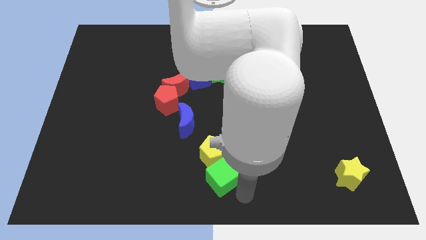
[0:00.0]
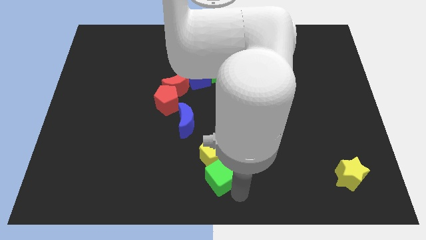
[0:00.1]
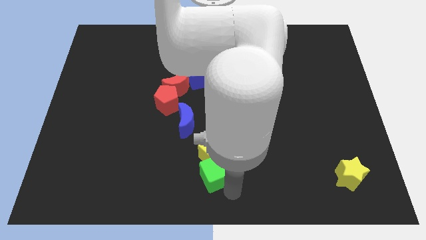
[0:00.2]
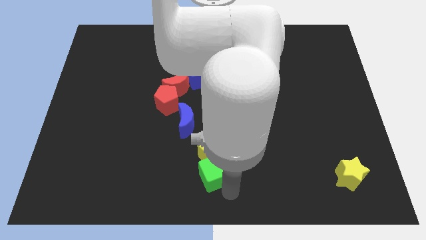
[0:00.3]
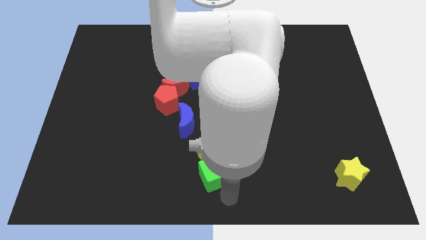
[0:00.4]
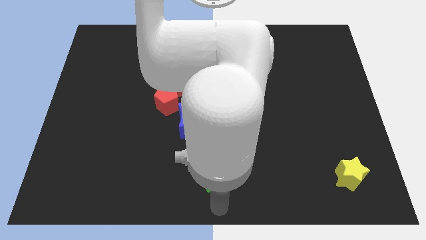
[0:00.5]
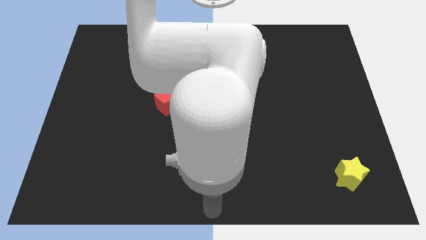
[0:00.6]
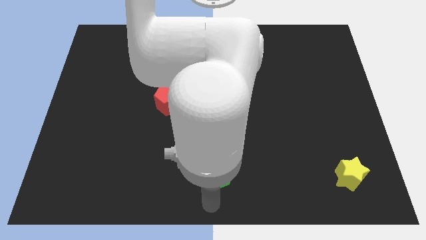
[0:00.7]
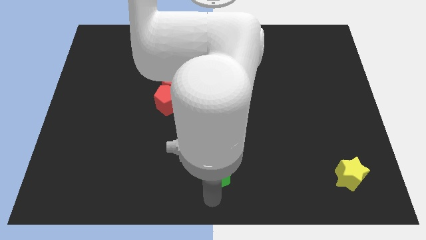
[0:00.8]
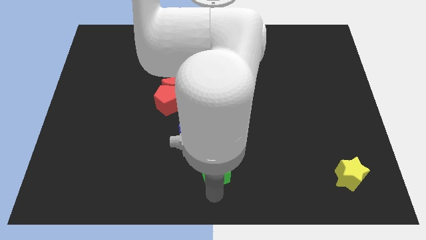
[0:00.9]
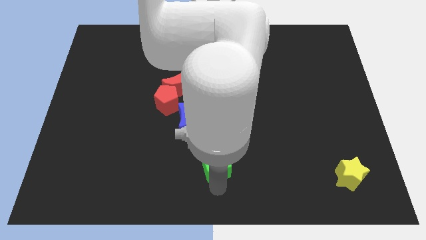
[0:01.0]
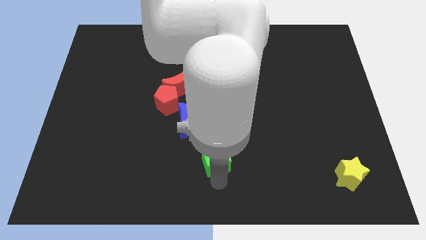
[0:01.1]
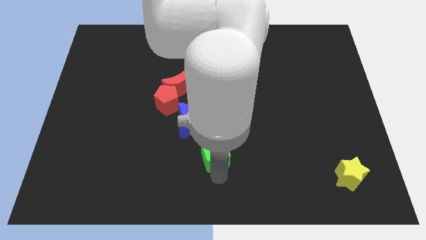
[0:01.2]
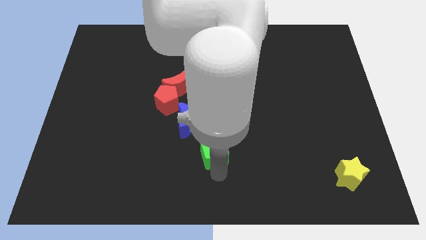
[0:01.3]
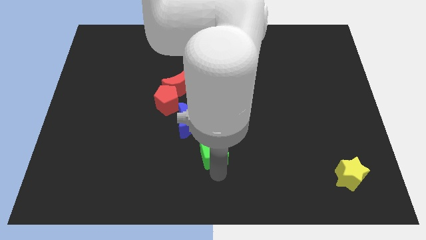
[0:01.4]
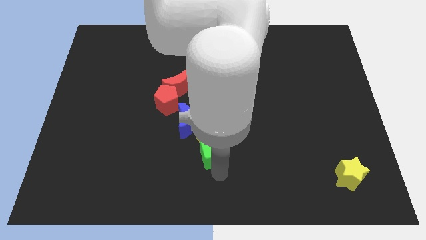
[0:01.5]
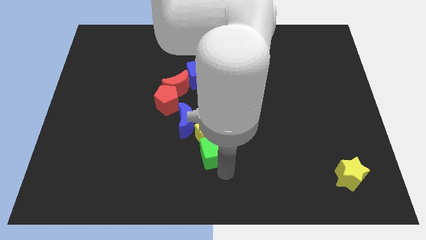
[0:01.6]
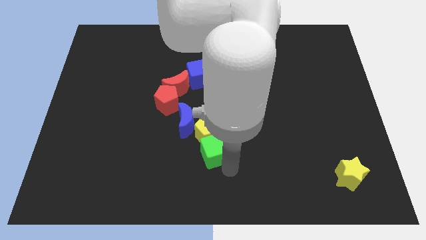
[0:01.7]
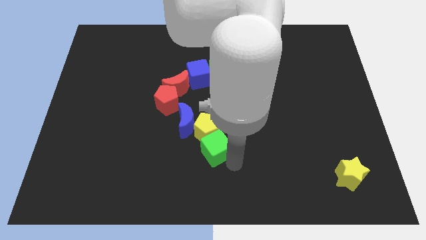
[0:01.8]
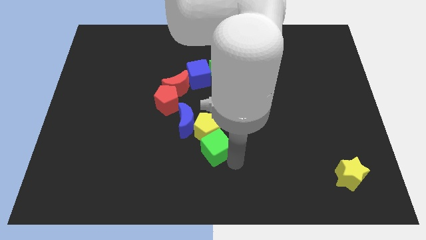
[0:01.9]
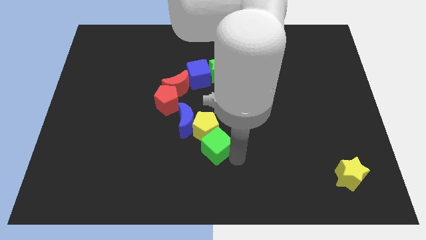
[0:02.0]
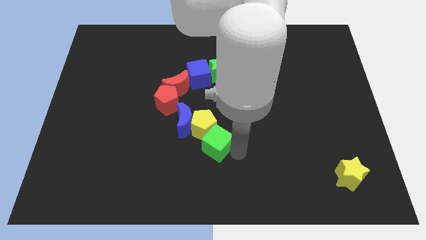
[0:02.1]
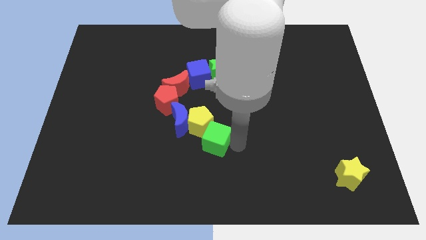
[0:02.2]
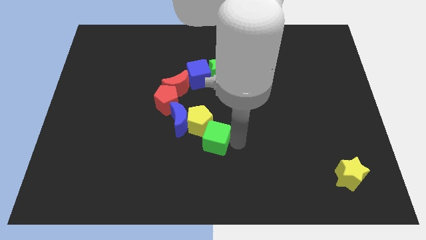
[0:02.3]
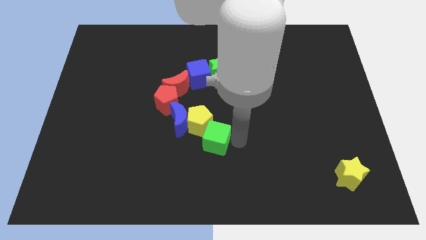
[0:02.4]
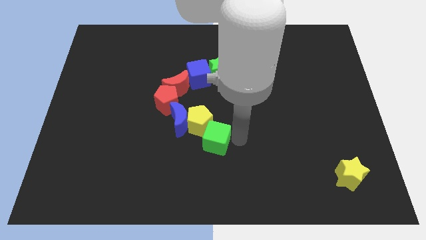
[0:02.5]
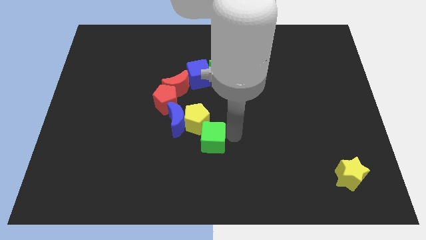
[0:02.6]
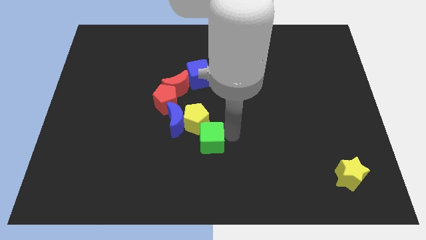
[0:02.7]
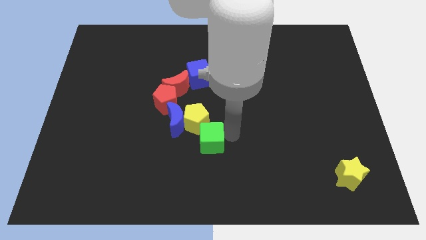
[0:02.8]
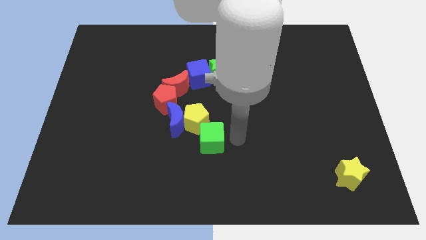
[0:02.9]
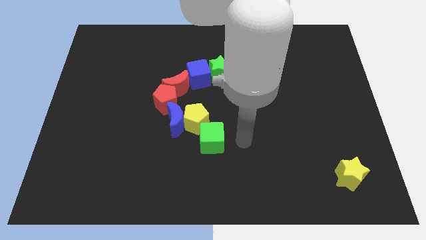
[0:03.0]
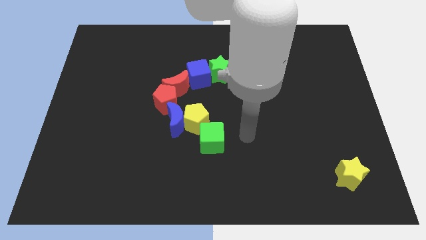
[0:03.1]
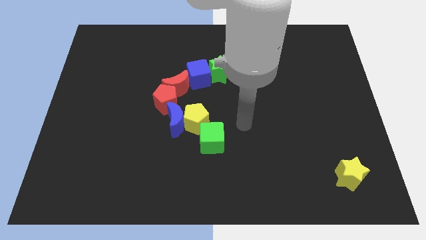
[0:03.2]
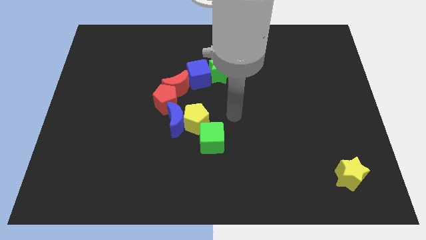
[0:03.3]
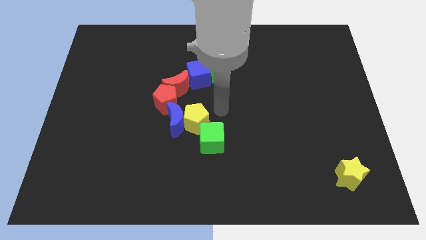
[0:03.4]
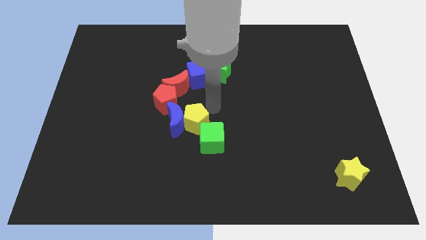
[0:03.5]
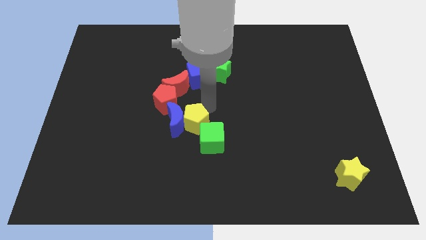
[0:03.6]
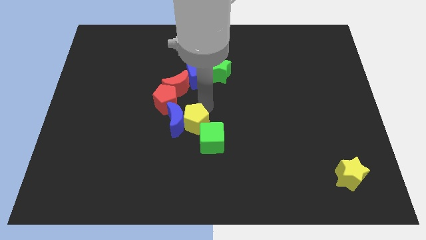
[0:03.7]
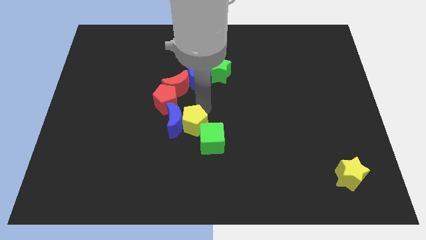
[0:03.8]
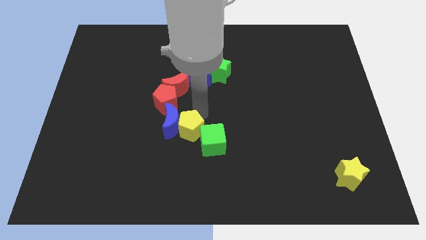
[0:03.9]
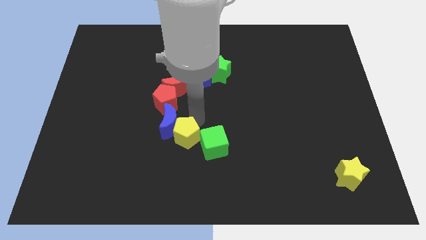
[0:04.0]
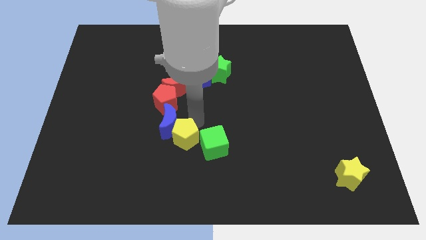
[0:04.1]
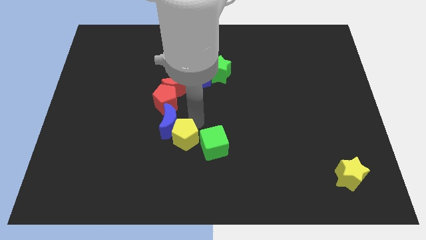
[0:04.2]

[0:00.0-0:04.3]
move the yellow pentagon green cube towards the bottom of blue crescent

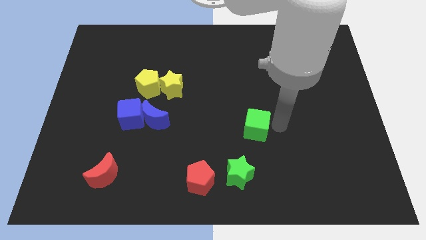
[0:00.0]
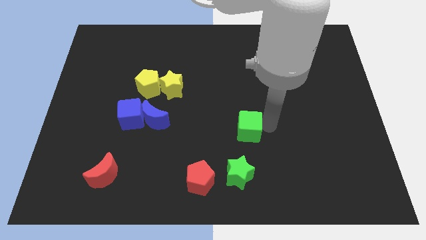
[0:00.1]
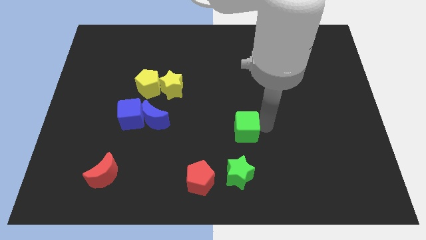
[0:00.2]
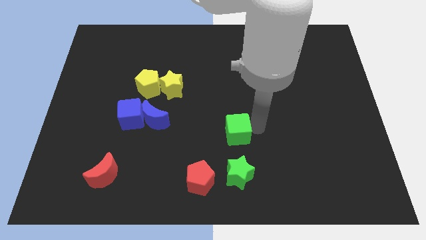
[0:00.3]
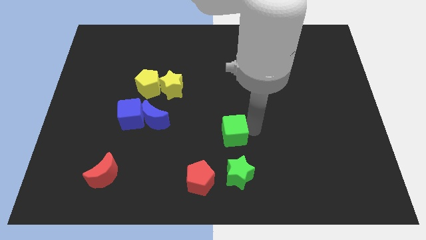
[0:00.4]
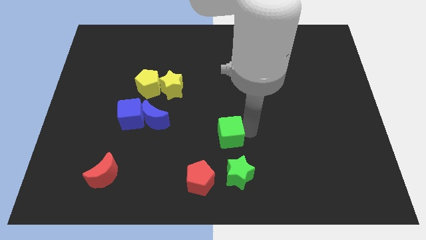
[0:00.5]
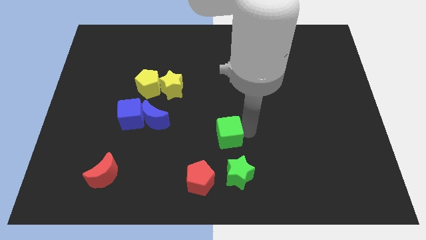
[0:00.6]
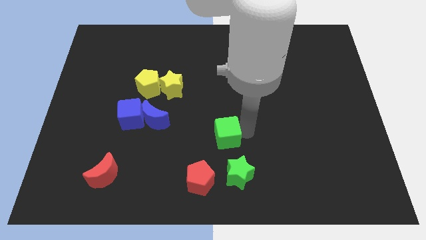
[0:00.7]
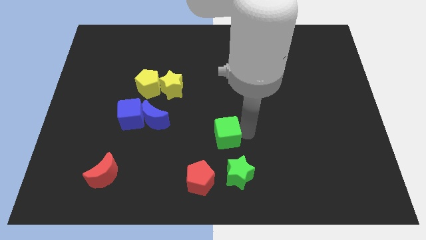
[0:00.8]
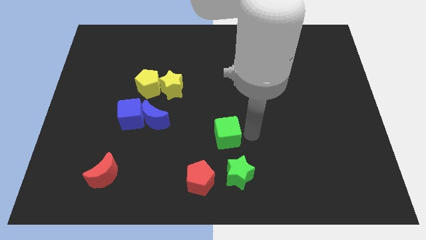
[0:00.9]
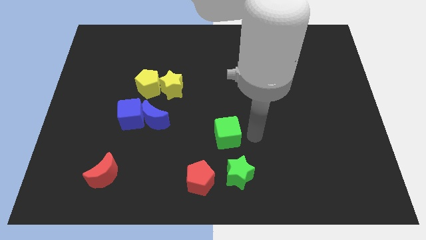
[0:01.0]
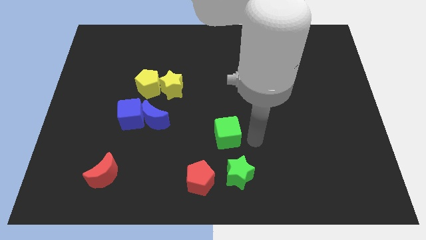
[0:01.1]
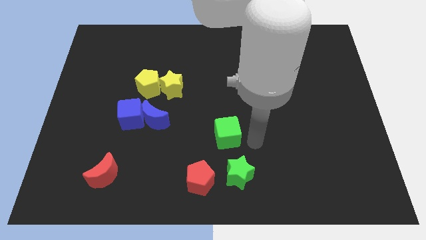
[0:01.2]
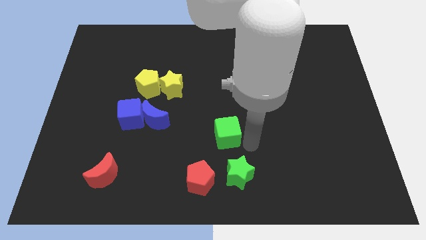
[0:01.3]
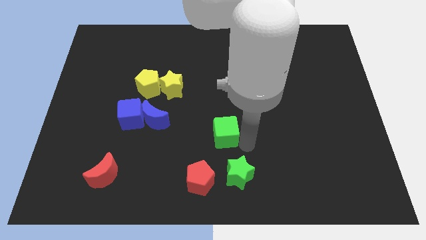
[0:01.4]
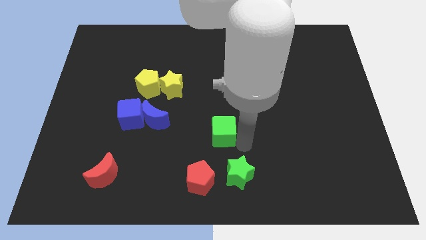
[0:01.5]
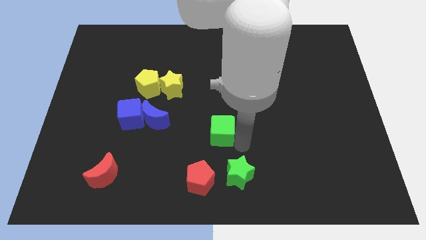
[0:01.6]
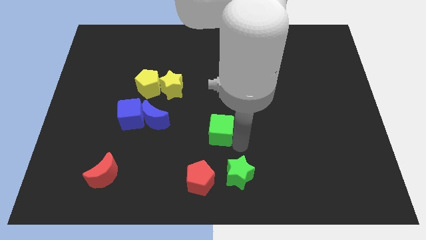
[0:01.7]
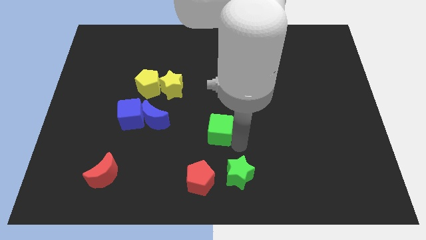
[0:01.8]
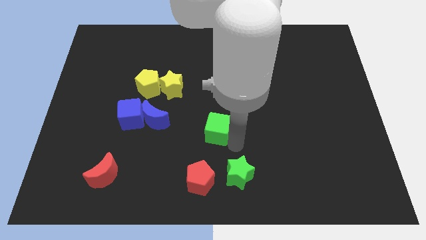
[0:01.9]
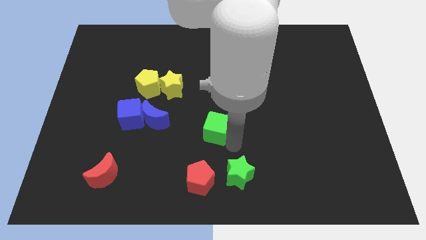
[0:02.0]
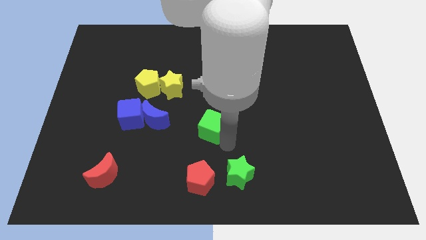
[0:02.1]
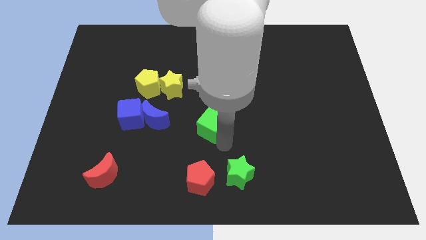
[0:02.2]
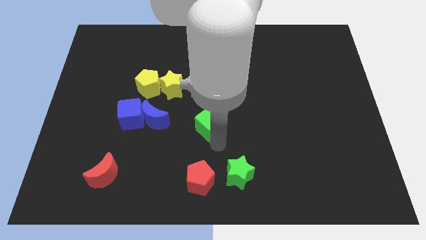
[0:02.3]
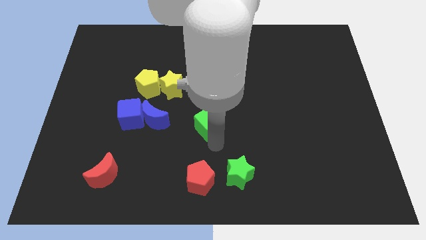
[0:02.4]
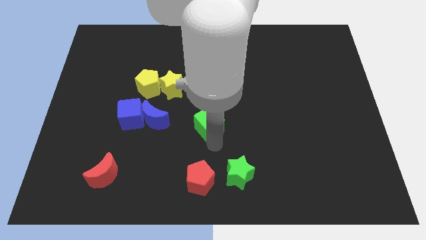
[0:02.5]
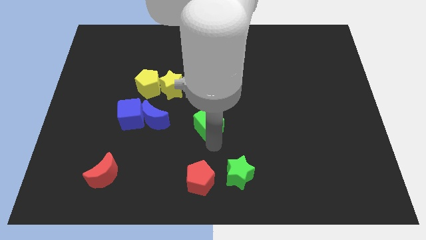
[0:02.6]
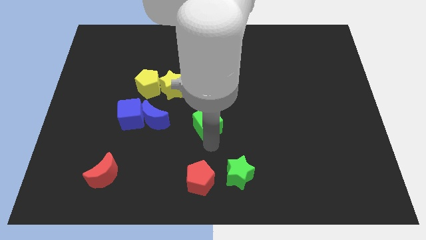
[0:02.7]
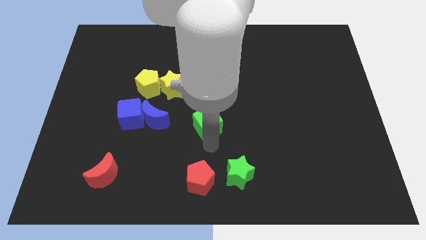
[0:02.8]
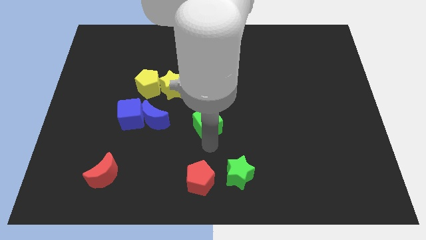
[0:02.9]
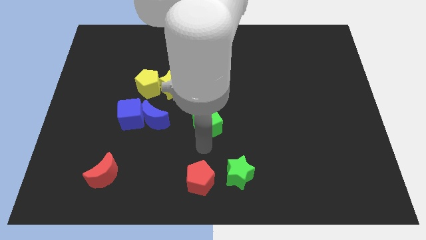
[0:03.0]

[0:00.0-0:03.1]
push the green cube above the red pentagon

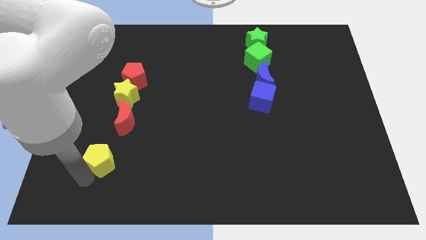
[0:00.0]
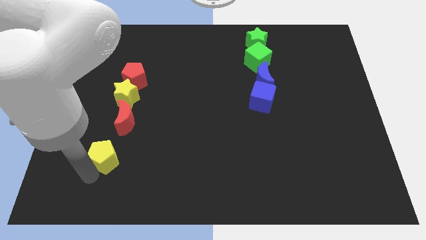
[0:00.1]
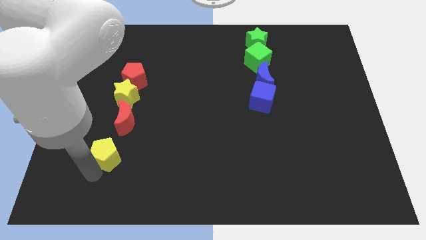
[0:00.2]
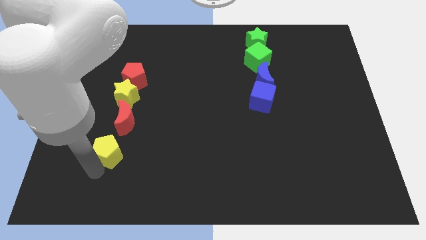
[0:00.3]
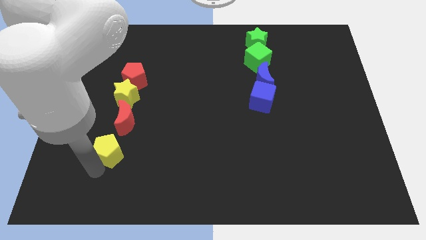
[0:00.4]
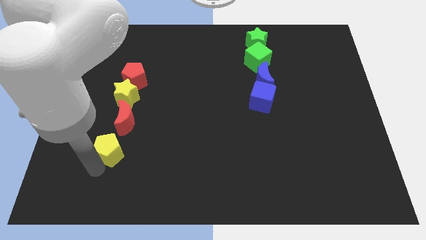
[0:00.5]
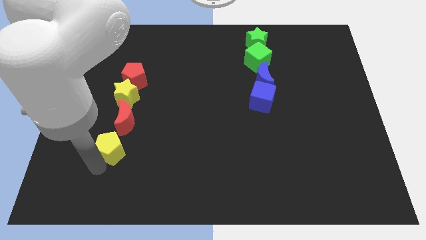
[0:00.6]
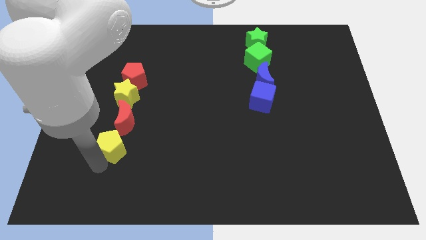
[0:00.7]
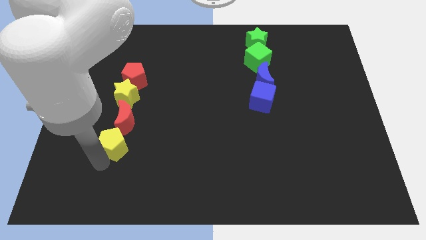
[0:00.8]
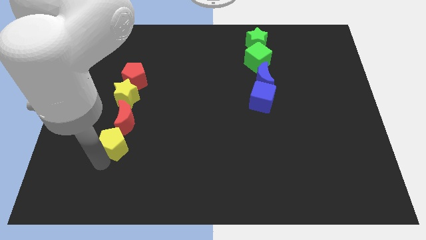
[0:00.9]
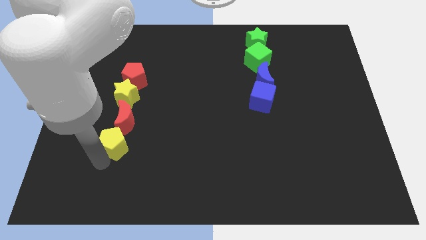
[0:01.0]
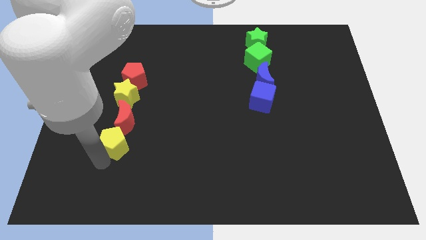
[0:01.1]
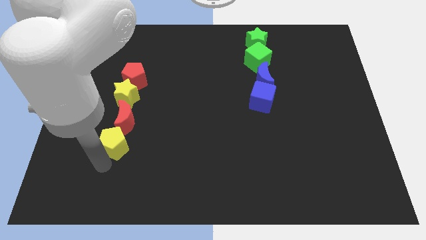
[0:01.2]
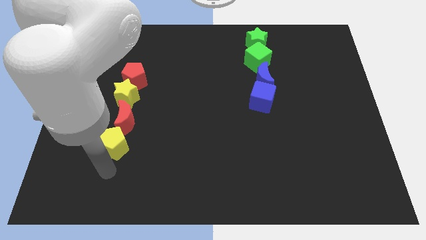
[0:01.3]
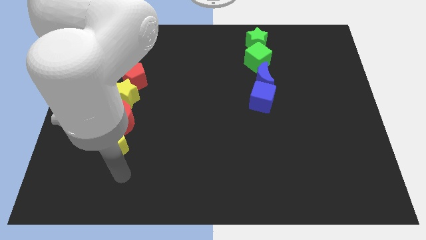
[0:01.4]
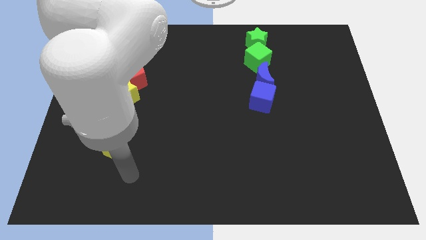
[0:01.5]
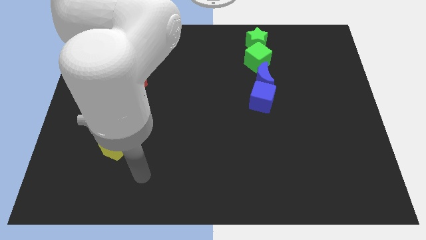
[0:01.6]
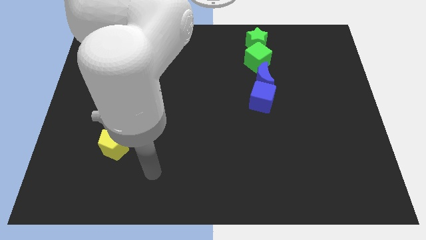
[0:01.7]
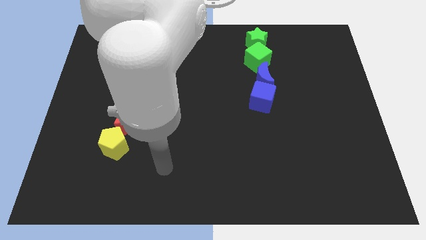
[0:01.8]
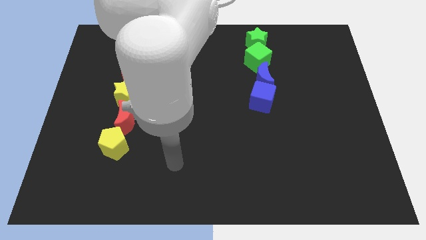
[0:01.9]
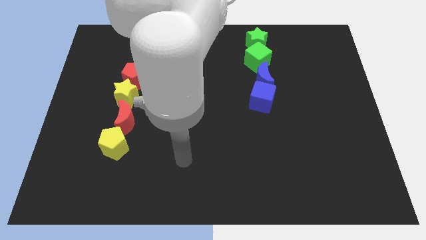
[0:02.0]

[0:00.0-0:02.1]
slide the yellow pentagon to the bottom of the red moon
